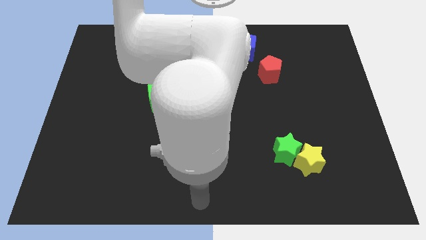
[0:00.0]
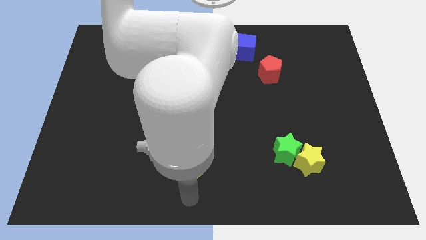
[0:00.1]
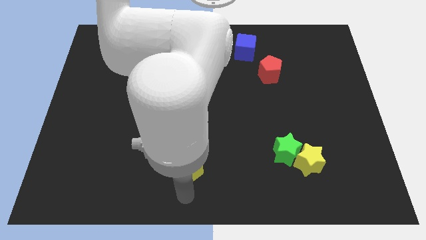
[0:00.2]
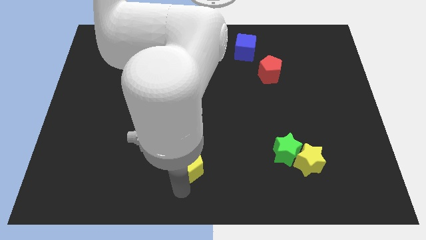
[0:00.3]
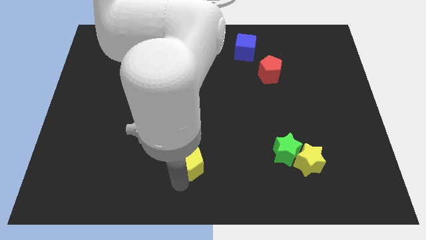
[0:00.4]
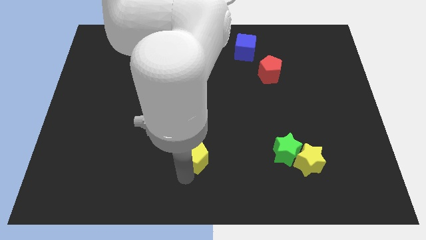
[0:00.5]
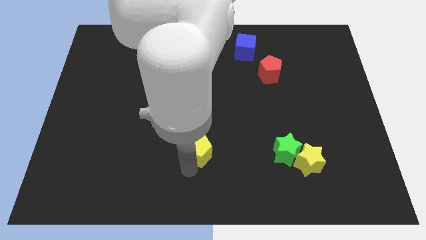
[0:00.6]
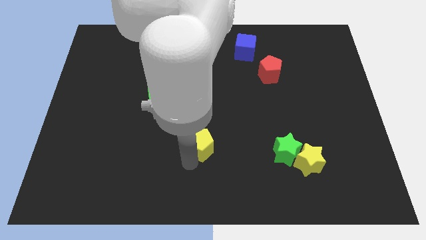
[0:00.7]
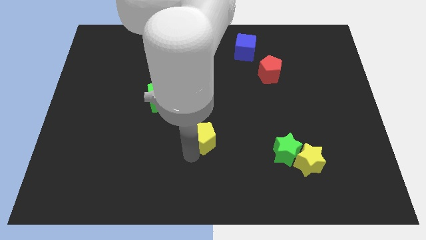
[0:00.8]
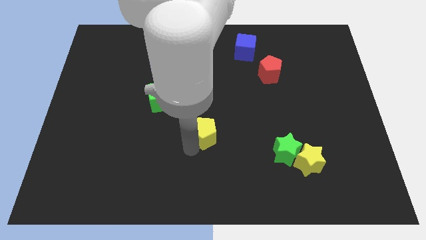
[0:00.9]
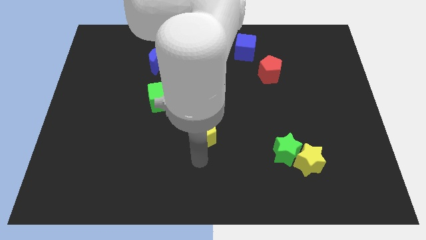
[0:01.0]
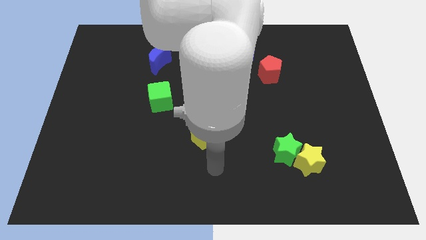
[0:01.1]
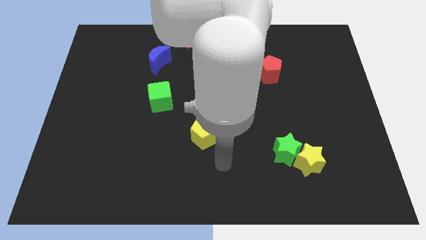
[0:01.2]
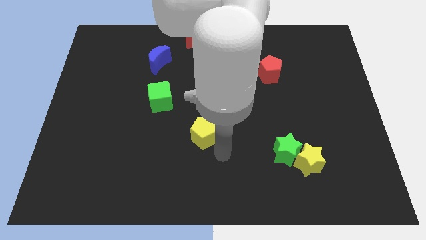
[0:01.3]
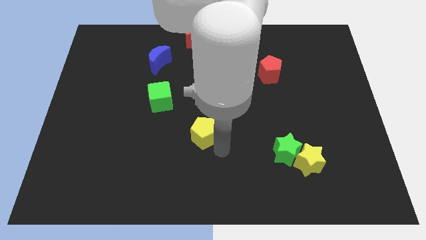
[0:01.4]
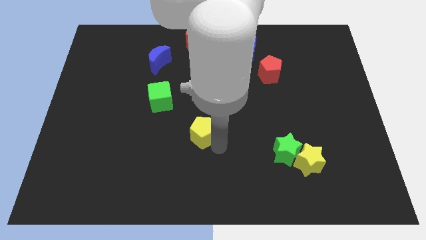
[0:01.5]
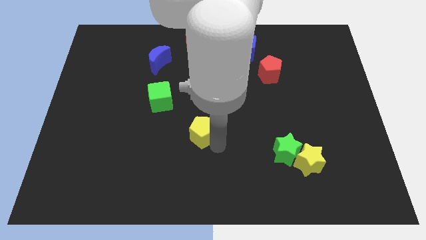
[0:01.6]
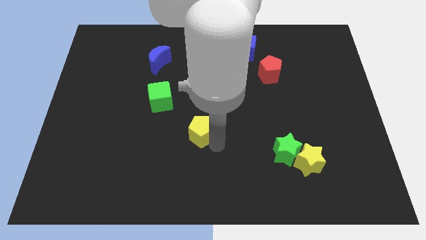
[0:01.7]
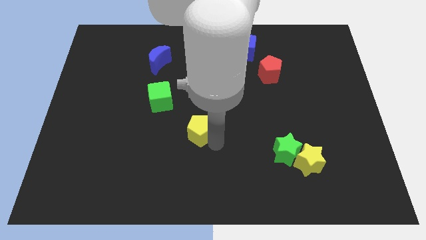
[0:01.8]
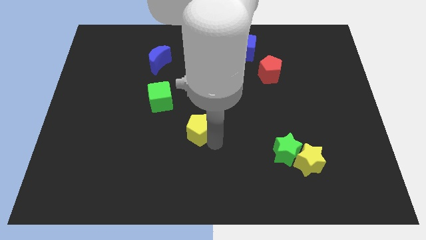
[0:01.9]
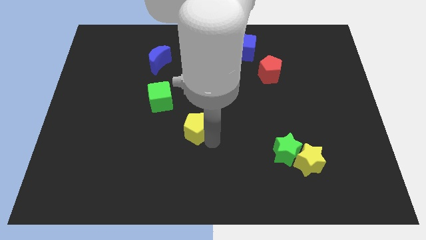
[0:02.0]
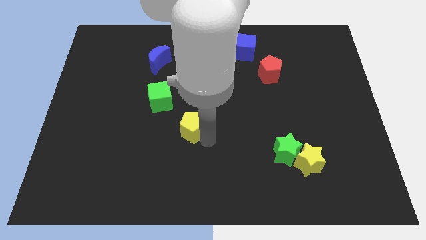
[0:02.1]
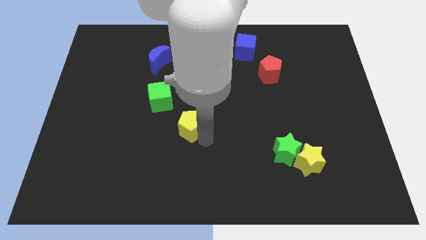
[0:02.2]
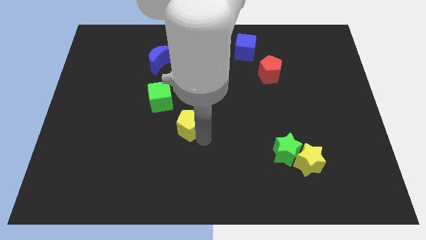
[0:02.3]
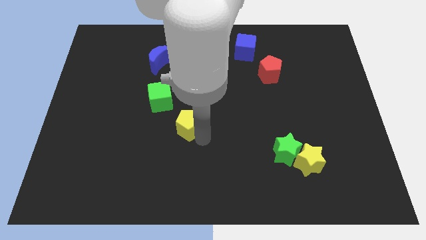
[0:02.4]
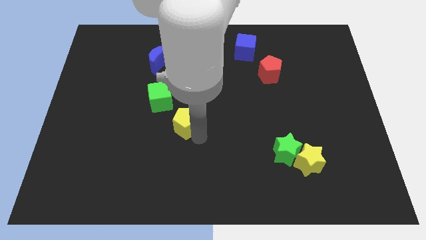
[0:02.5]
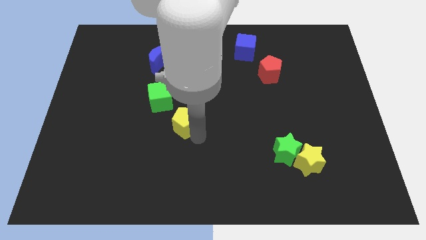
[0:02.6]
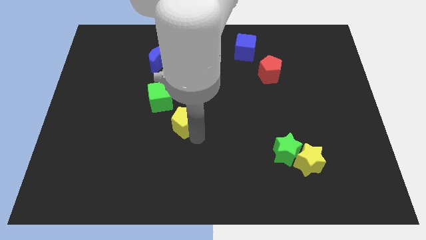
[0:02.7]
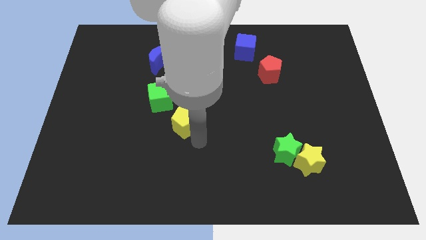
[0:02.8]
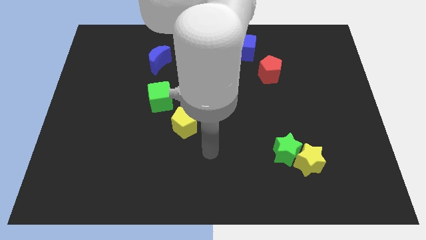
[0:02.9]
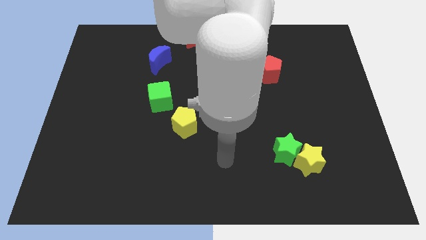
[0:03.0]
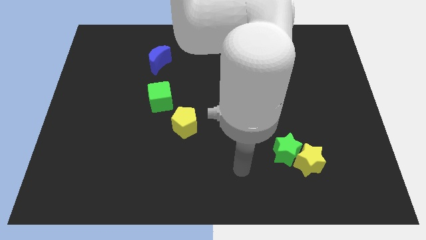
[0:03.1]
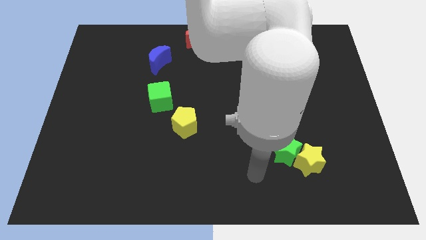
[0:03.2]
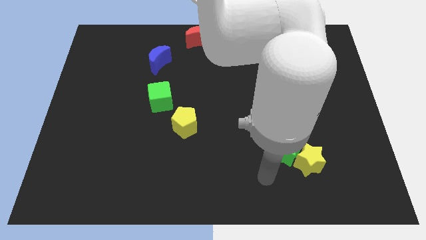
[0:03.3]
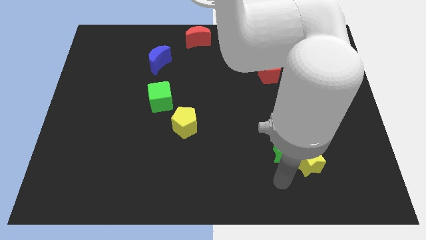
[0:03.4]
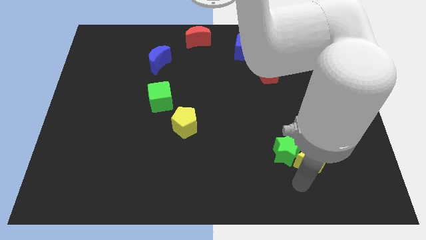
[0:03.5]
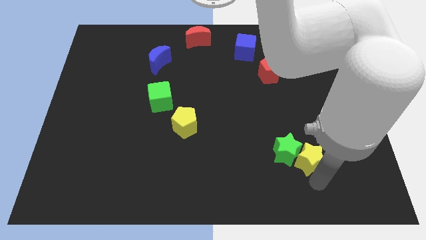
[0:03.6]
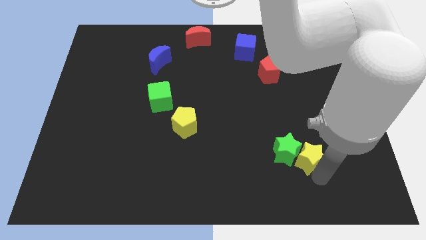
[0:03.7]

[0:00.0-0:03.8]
move the yellow pentagon diagonally top left to the green star

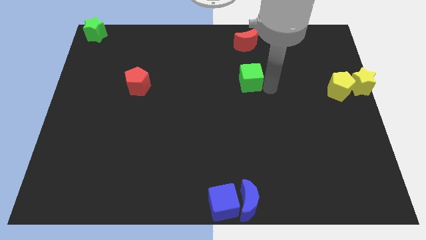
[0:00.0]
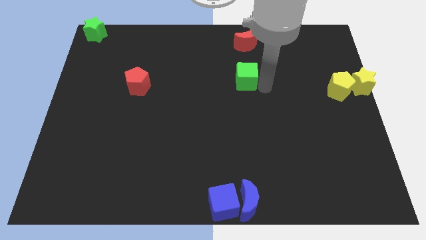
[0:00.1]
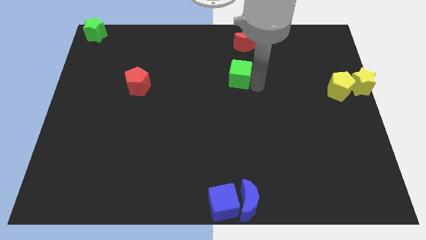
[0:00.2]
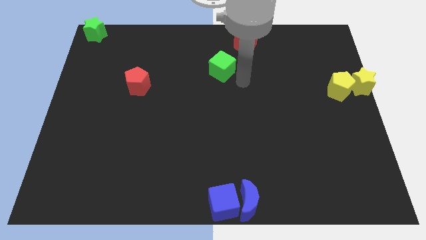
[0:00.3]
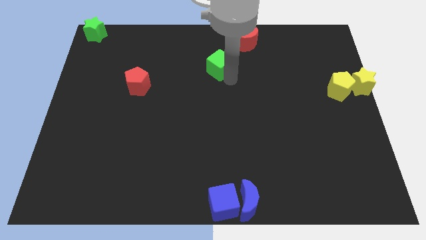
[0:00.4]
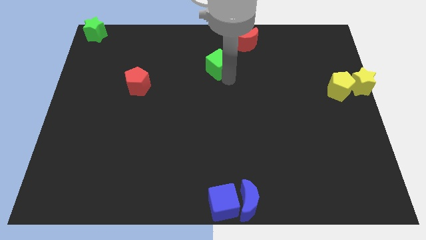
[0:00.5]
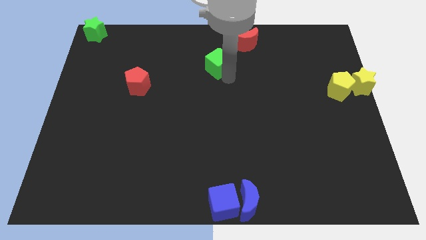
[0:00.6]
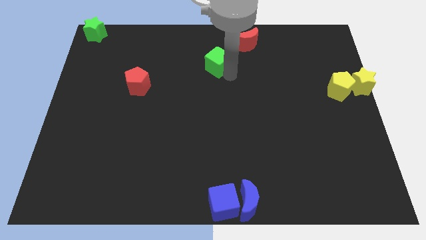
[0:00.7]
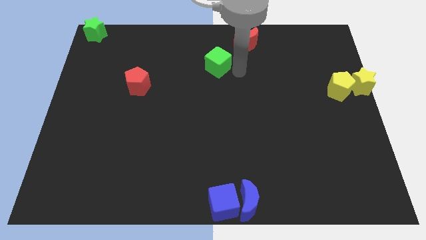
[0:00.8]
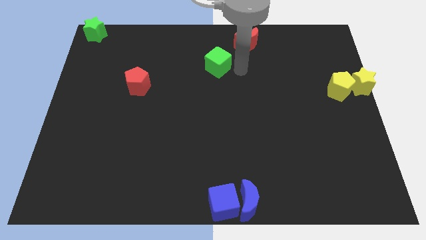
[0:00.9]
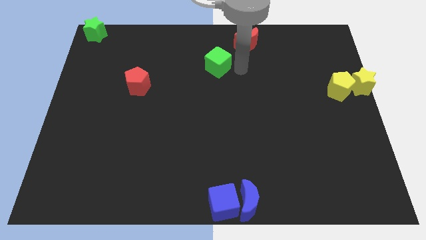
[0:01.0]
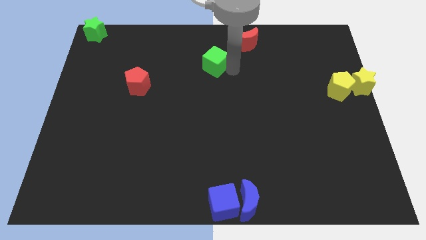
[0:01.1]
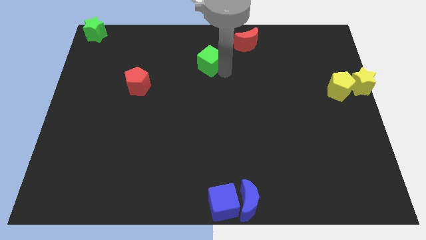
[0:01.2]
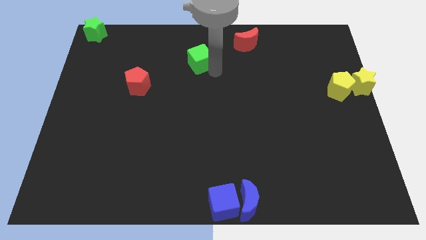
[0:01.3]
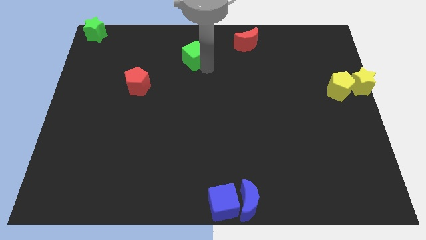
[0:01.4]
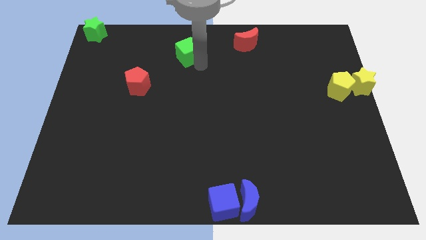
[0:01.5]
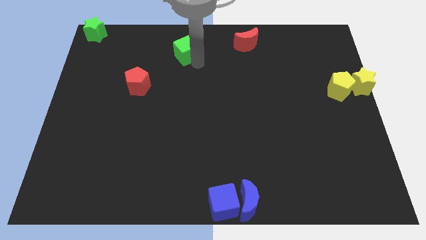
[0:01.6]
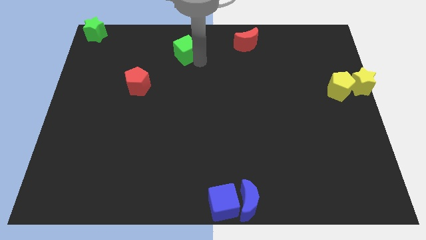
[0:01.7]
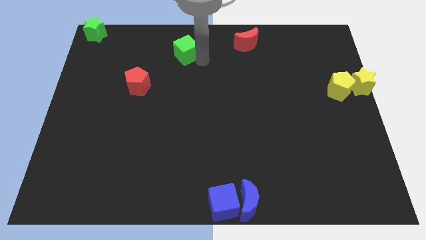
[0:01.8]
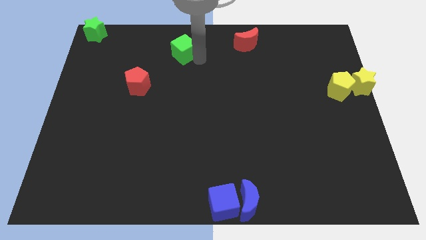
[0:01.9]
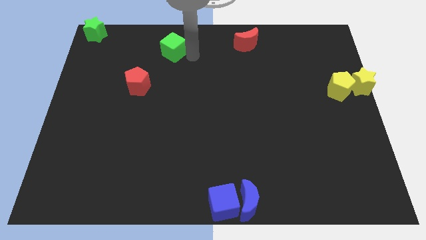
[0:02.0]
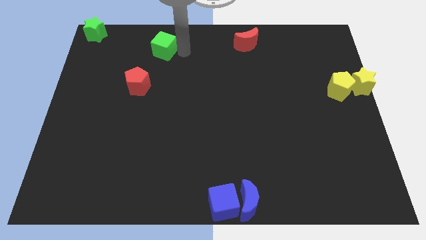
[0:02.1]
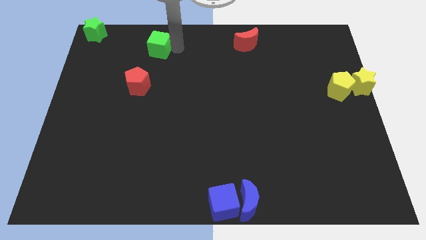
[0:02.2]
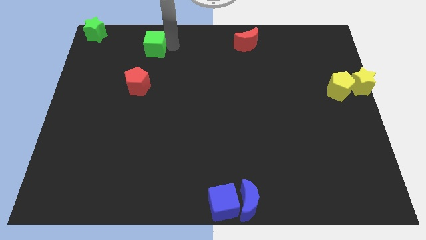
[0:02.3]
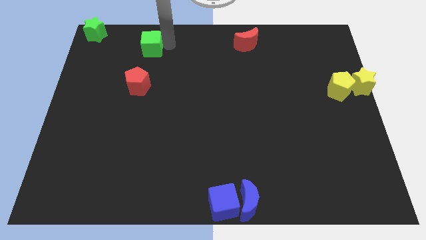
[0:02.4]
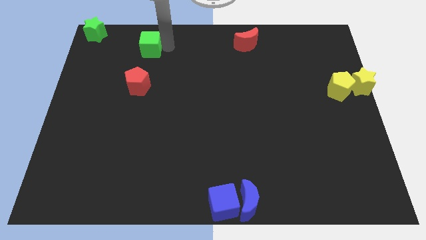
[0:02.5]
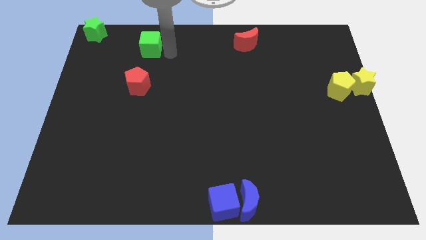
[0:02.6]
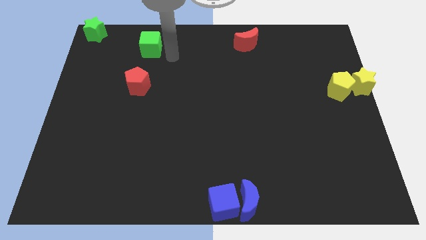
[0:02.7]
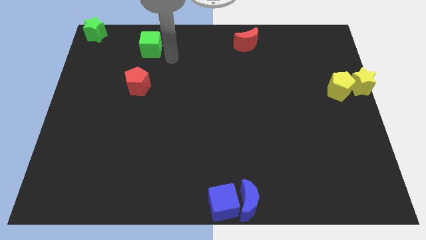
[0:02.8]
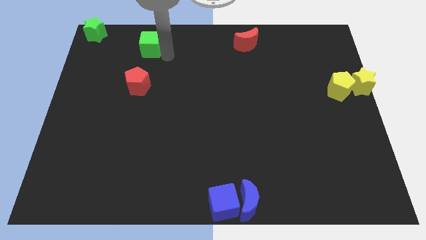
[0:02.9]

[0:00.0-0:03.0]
push the green cube towards the green star

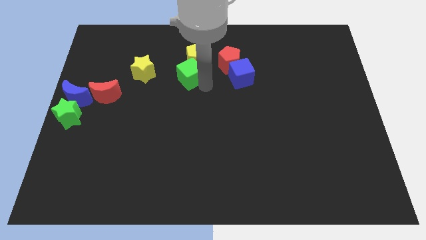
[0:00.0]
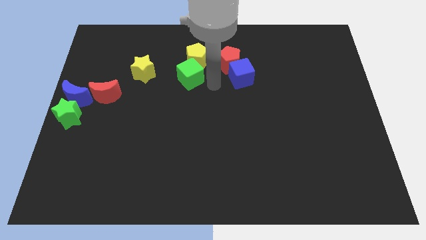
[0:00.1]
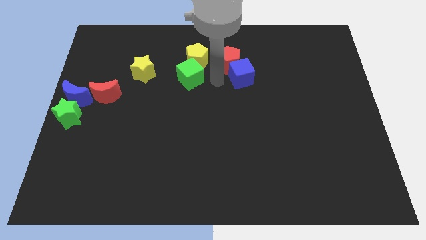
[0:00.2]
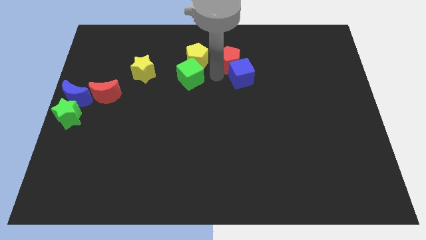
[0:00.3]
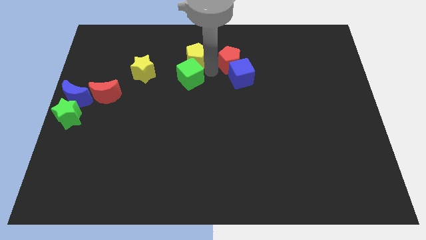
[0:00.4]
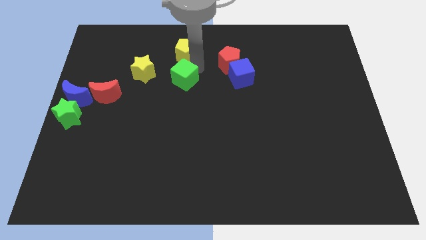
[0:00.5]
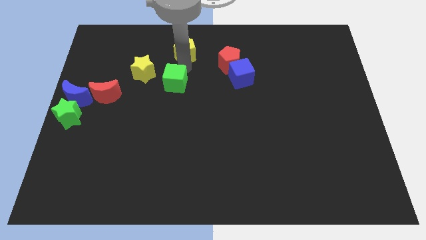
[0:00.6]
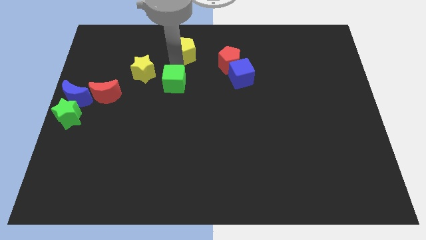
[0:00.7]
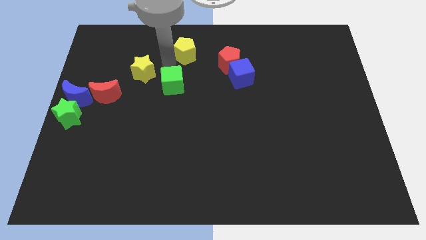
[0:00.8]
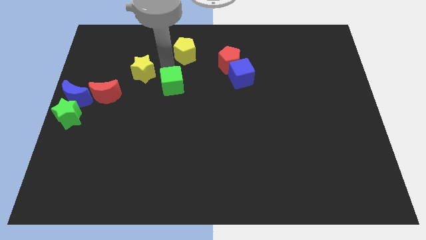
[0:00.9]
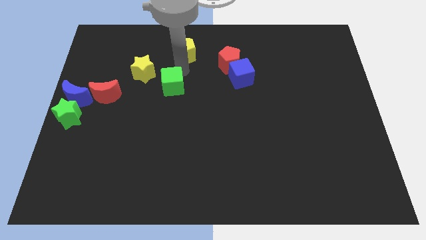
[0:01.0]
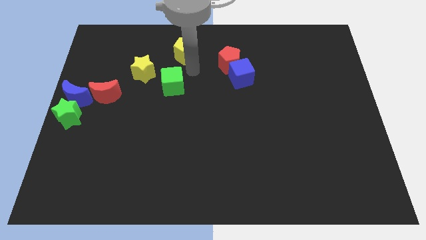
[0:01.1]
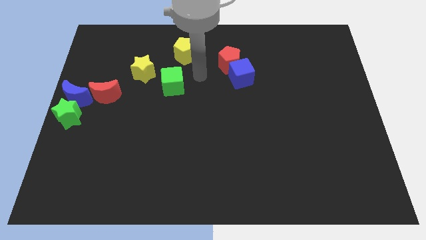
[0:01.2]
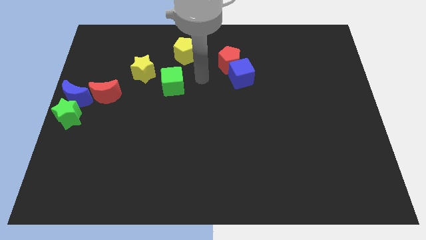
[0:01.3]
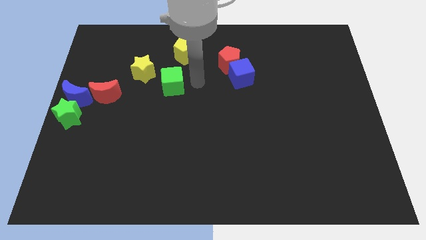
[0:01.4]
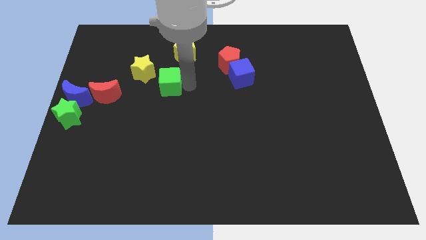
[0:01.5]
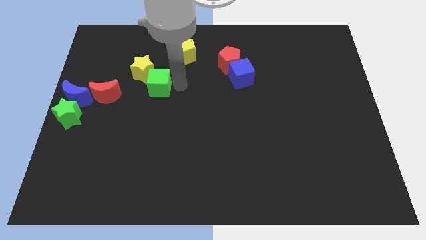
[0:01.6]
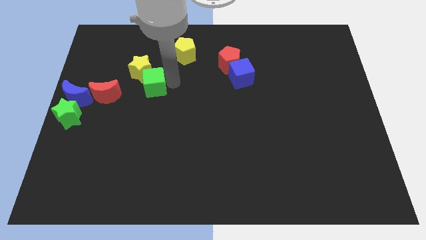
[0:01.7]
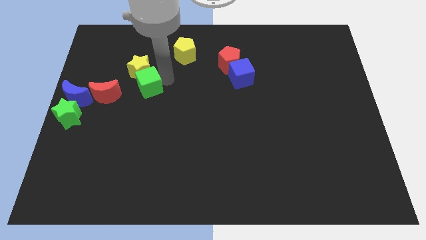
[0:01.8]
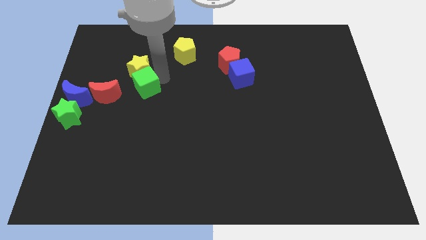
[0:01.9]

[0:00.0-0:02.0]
push the green cube into the yellow star
